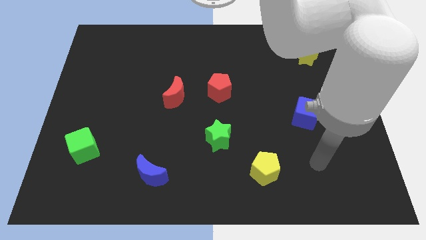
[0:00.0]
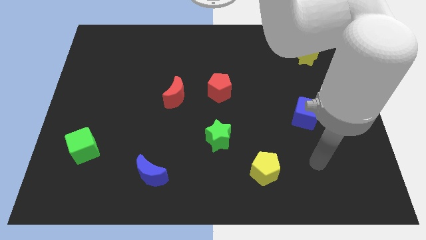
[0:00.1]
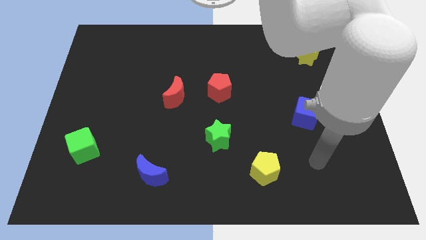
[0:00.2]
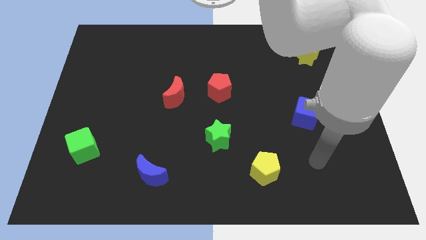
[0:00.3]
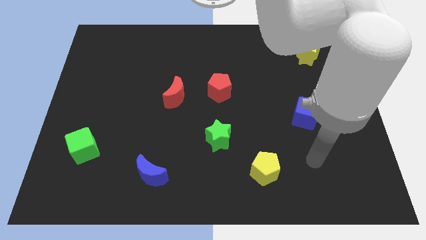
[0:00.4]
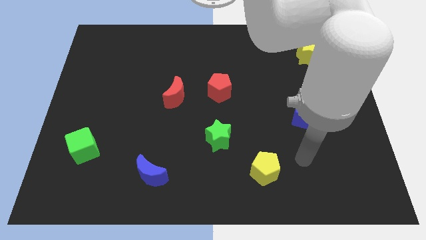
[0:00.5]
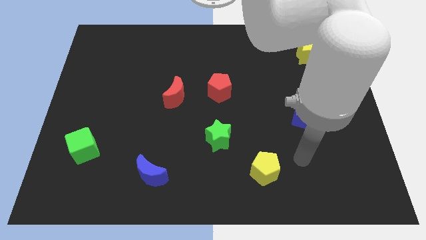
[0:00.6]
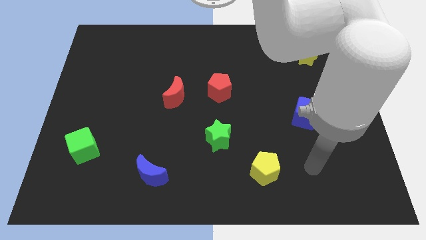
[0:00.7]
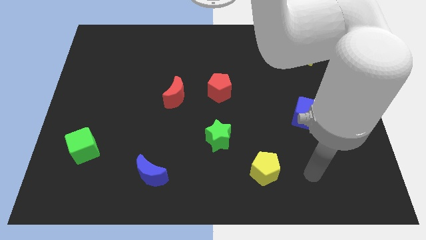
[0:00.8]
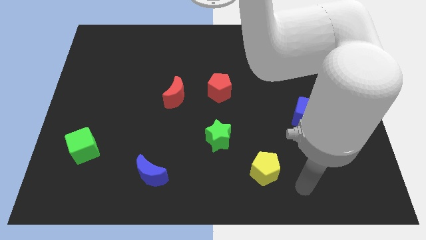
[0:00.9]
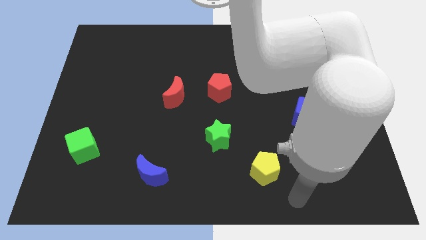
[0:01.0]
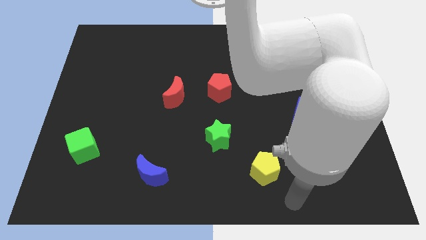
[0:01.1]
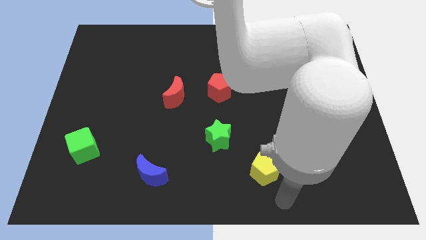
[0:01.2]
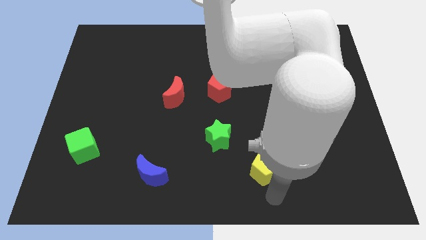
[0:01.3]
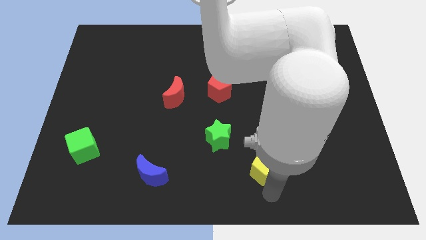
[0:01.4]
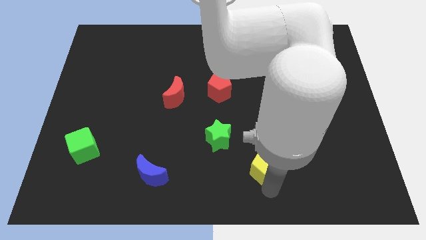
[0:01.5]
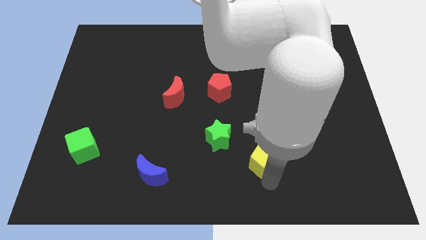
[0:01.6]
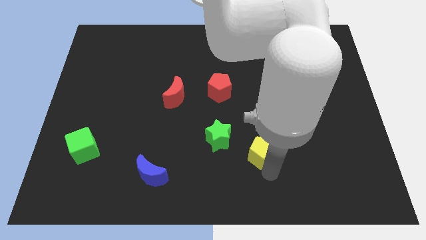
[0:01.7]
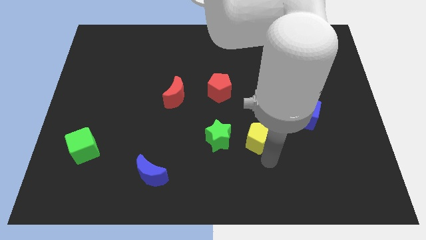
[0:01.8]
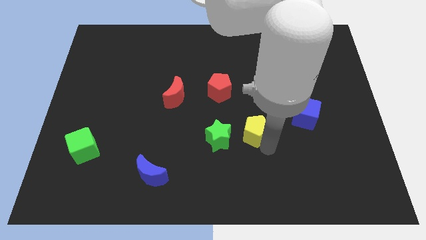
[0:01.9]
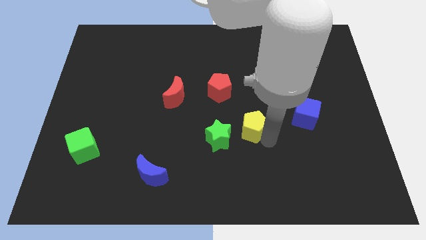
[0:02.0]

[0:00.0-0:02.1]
place the yellow pentagon in between green star and blue cube

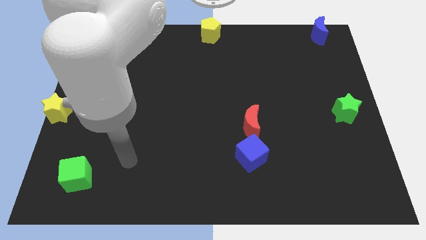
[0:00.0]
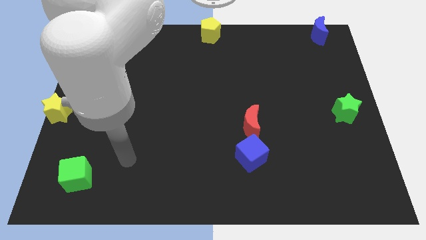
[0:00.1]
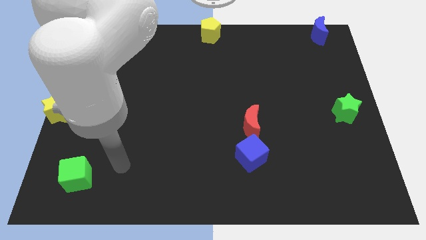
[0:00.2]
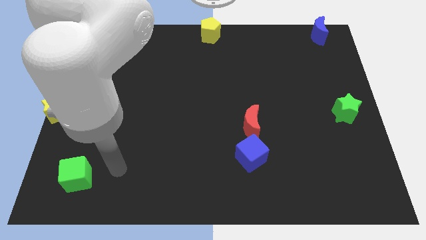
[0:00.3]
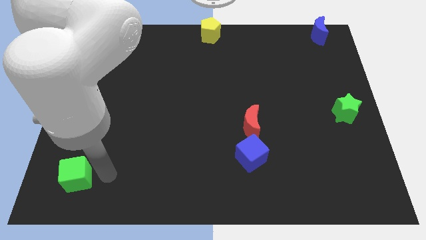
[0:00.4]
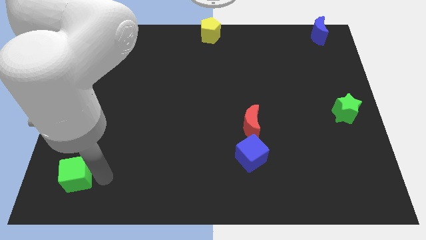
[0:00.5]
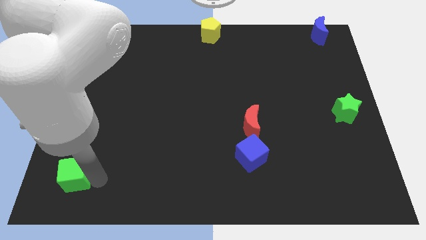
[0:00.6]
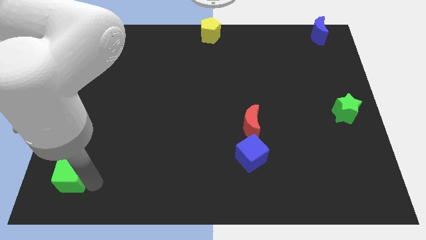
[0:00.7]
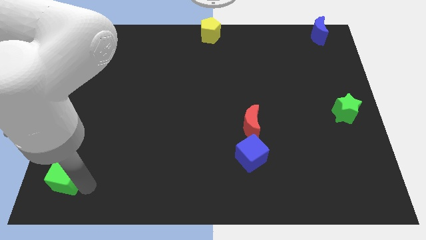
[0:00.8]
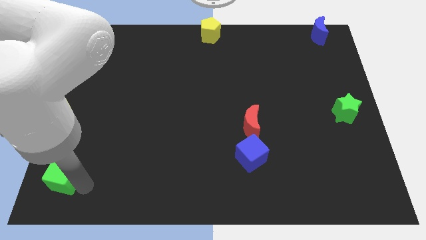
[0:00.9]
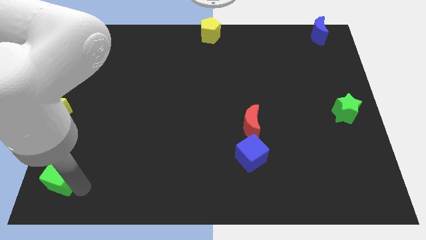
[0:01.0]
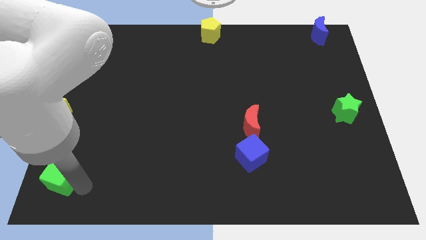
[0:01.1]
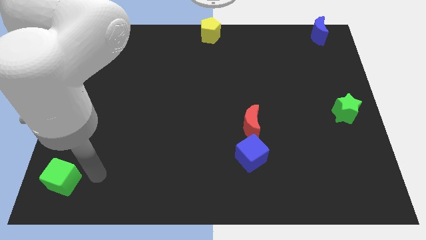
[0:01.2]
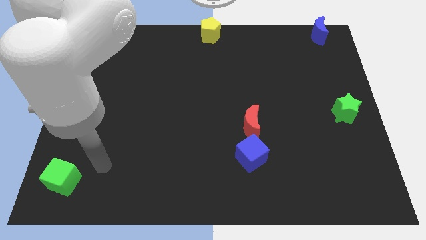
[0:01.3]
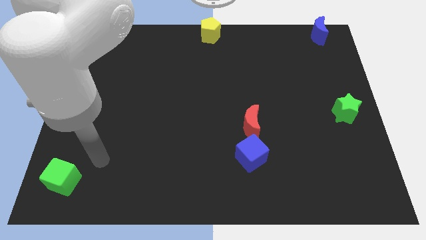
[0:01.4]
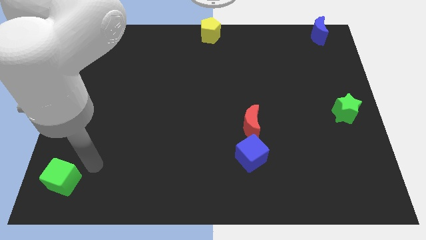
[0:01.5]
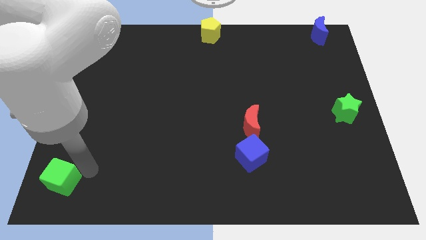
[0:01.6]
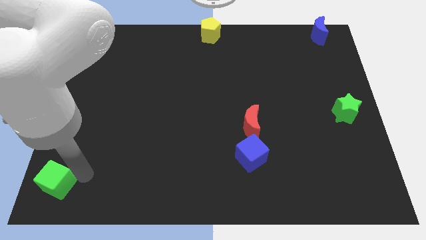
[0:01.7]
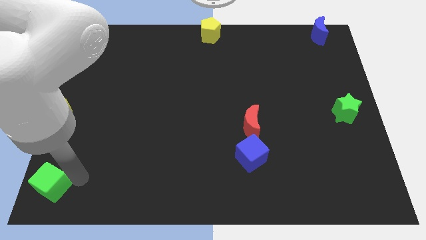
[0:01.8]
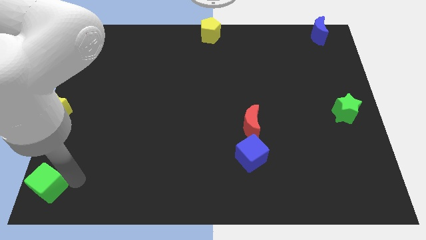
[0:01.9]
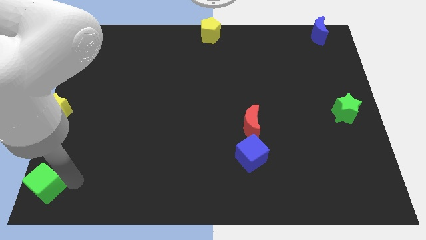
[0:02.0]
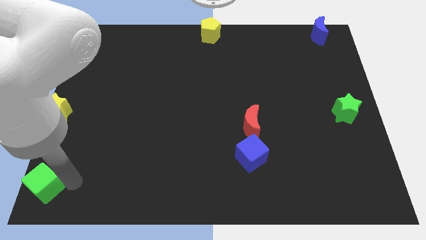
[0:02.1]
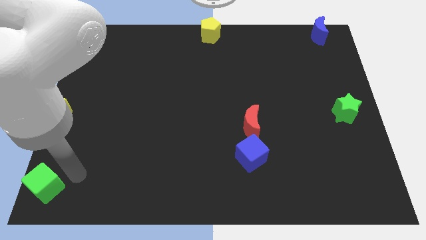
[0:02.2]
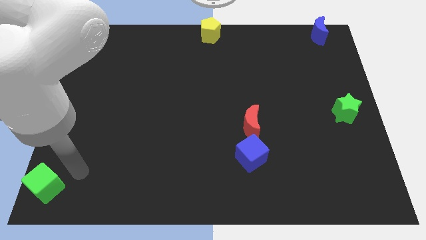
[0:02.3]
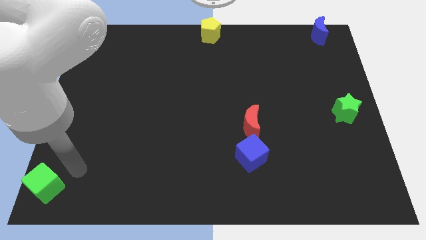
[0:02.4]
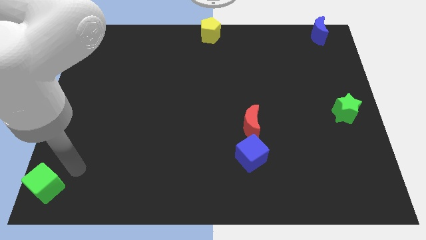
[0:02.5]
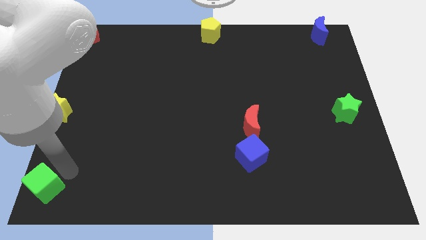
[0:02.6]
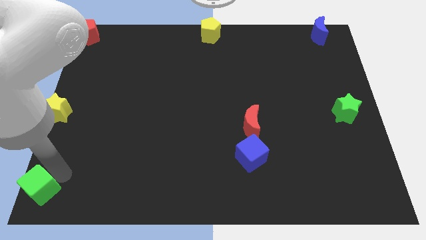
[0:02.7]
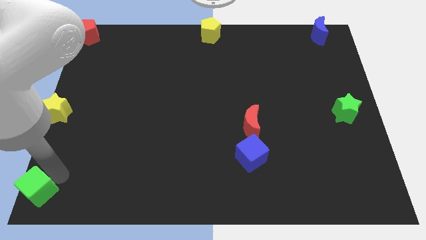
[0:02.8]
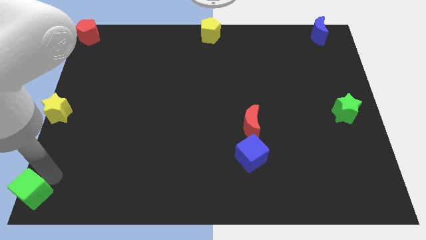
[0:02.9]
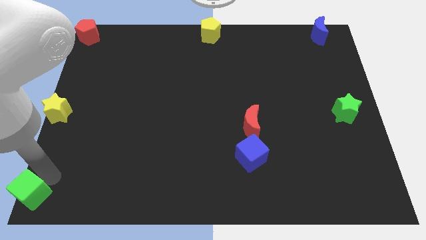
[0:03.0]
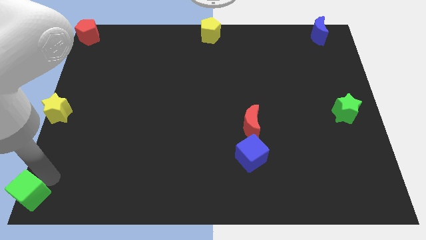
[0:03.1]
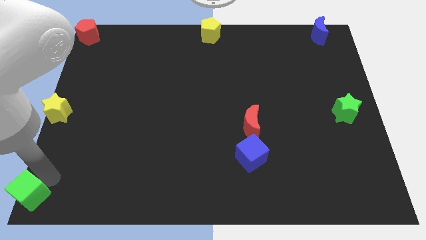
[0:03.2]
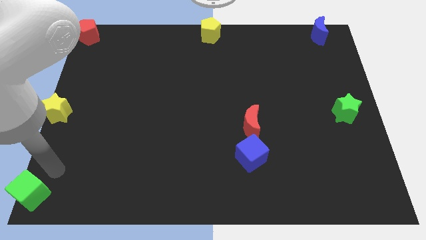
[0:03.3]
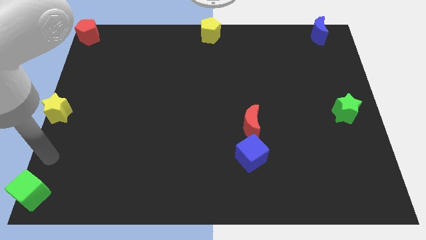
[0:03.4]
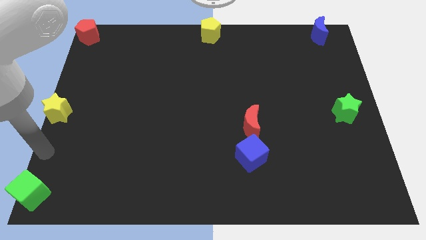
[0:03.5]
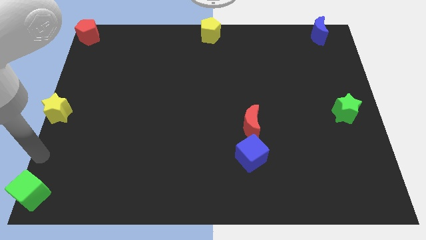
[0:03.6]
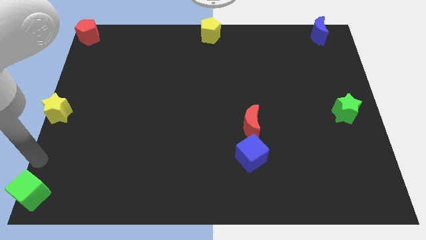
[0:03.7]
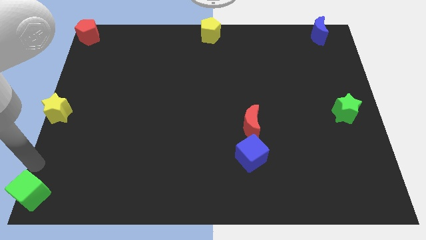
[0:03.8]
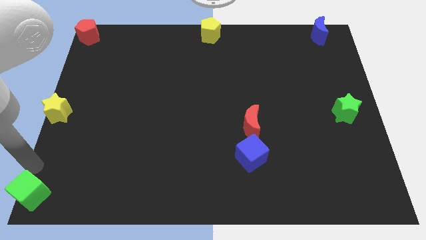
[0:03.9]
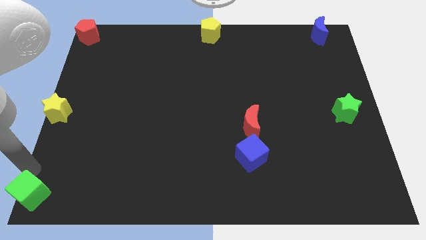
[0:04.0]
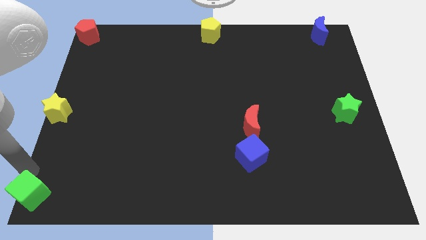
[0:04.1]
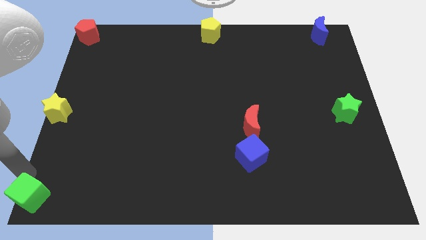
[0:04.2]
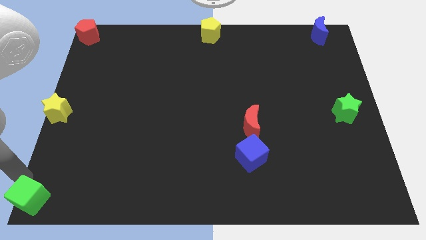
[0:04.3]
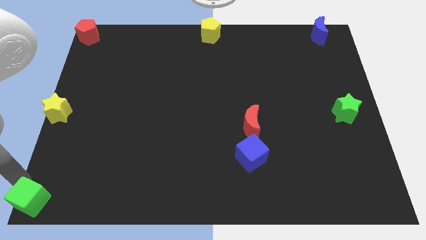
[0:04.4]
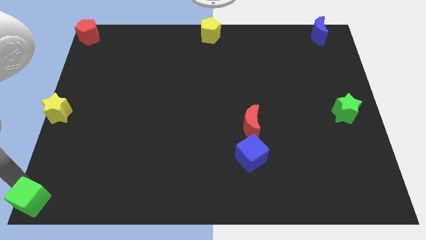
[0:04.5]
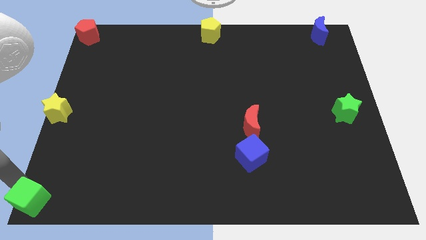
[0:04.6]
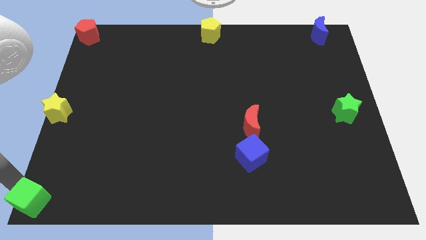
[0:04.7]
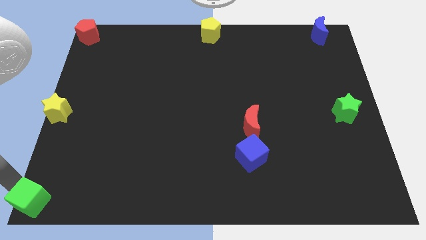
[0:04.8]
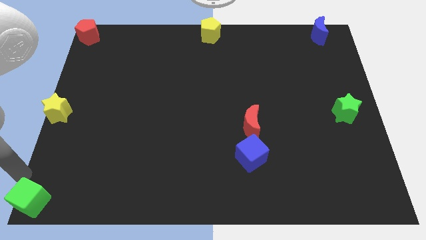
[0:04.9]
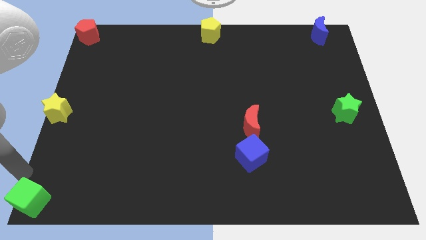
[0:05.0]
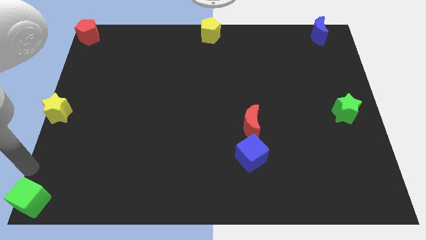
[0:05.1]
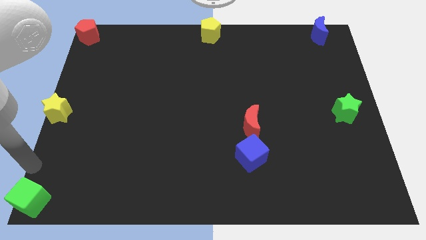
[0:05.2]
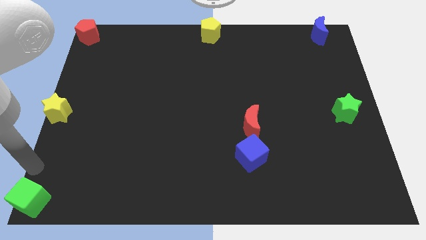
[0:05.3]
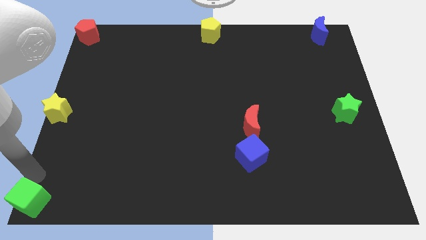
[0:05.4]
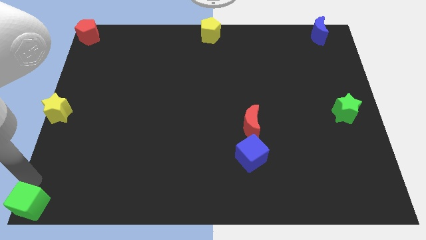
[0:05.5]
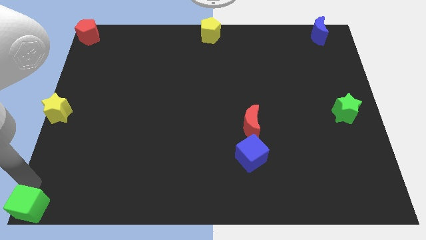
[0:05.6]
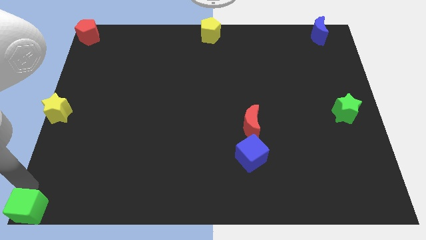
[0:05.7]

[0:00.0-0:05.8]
move the green cube to the bottom left of the board

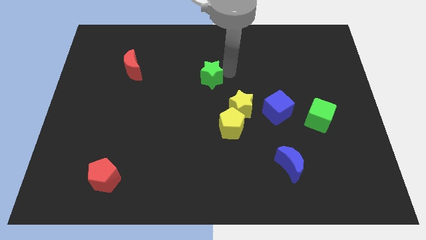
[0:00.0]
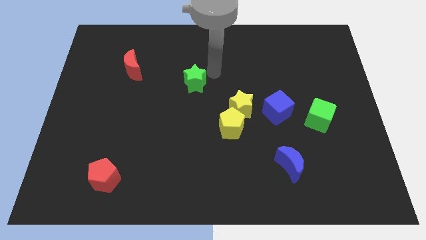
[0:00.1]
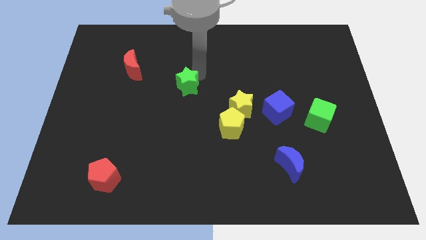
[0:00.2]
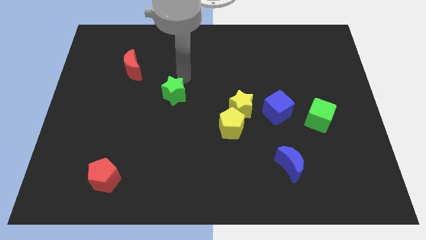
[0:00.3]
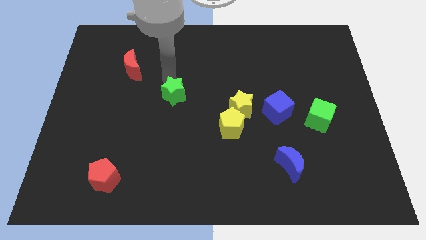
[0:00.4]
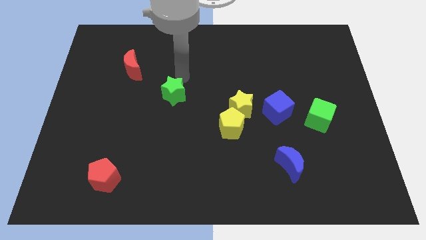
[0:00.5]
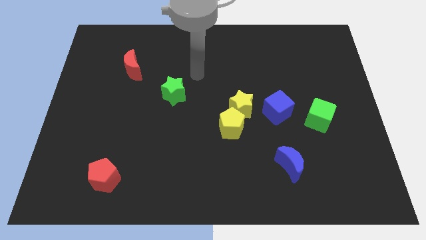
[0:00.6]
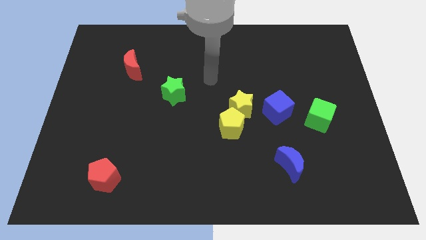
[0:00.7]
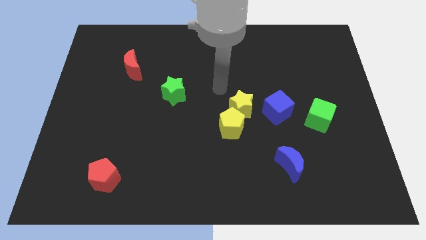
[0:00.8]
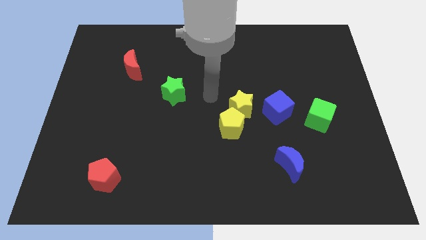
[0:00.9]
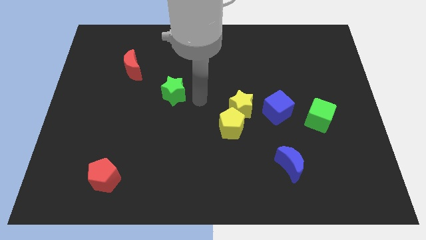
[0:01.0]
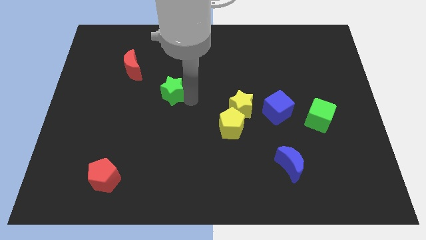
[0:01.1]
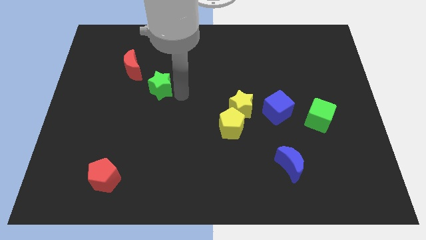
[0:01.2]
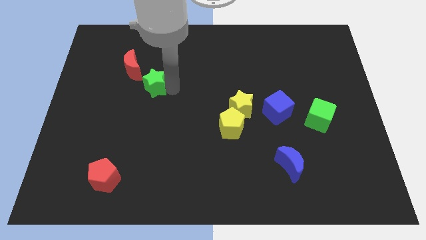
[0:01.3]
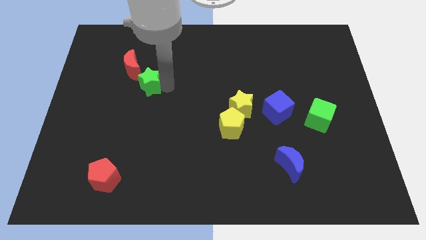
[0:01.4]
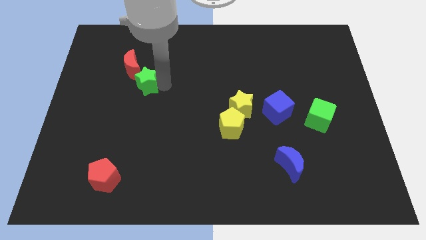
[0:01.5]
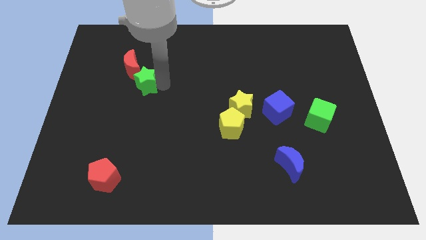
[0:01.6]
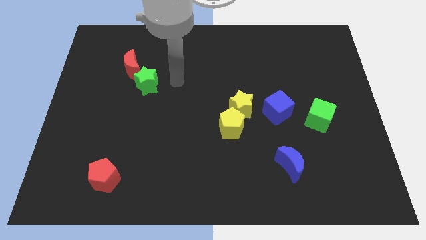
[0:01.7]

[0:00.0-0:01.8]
push the green star to the bottom of the red crescent on the board
